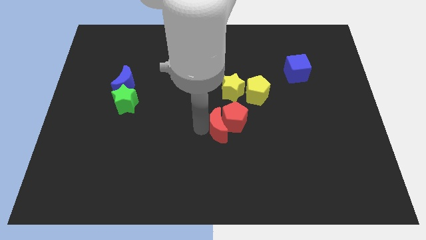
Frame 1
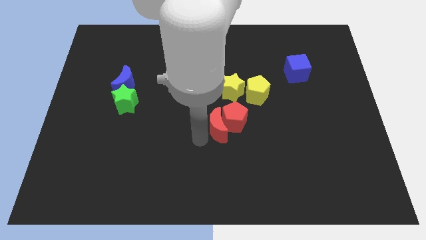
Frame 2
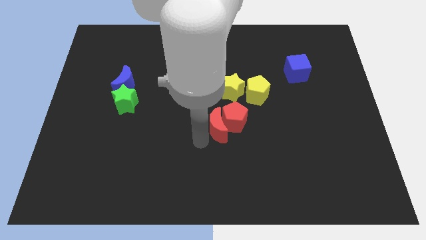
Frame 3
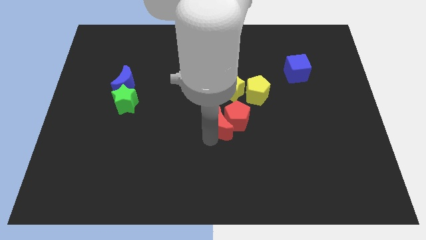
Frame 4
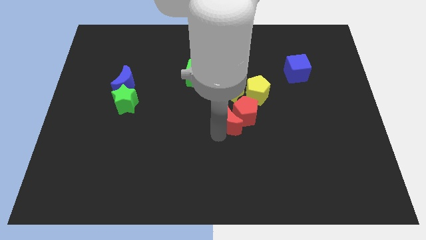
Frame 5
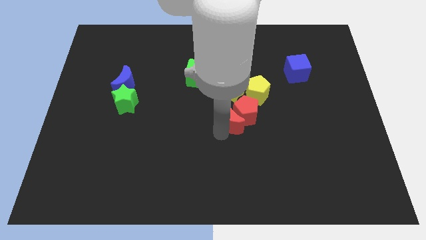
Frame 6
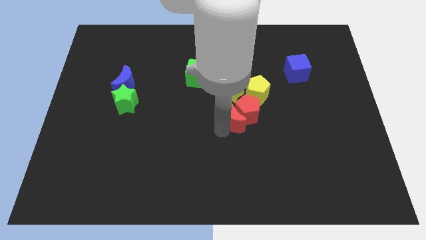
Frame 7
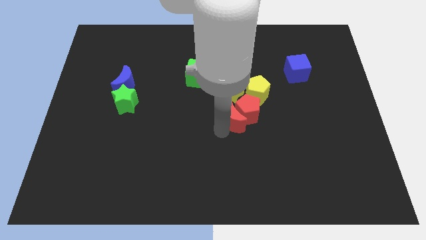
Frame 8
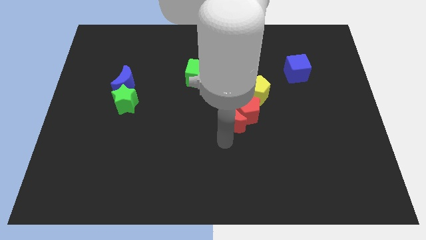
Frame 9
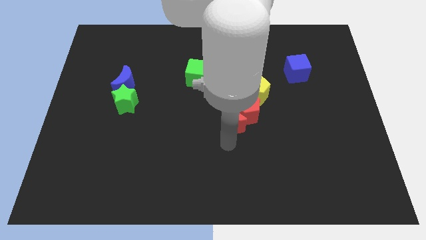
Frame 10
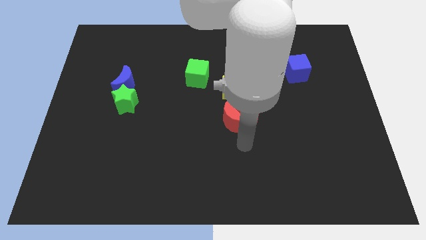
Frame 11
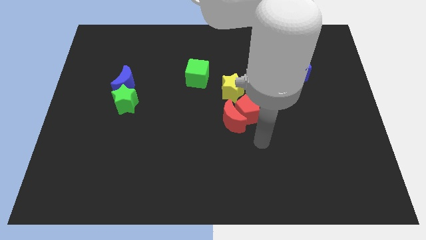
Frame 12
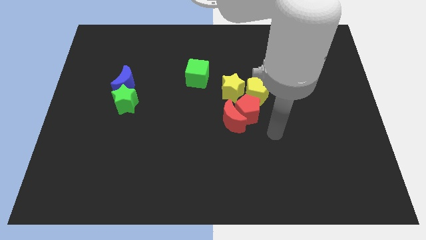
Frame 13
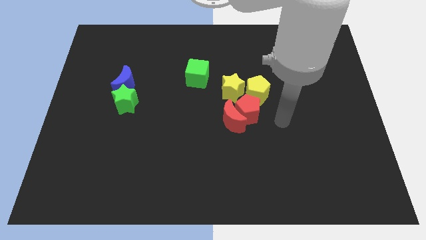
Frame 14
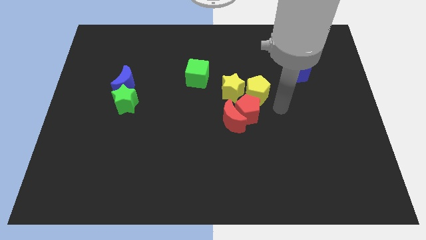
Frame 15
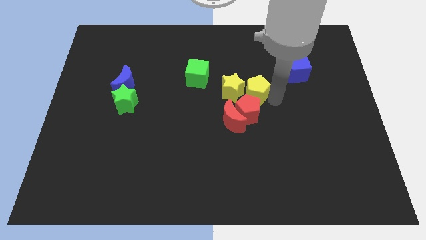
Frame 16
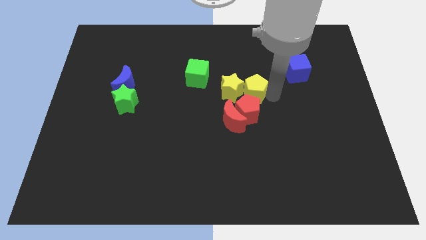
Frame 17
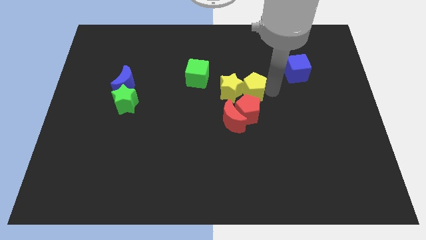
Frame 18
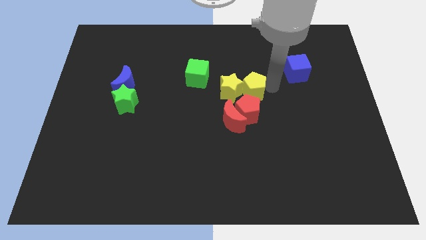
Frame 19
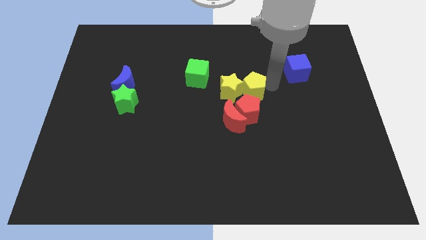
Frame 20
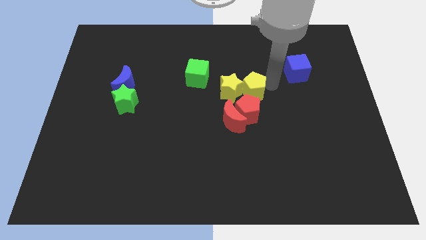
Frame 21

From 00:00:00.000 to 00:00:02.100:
place the red moon and red pentagon close to the yellow star and yellow pentagon

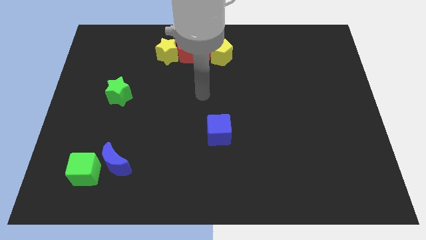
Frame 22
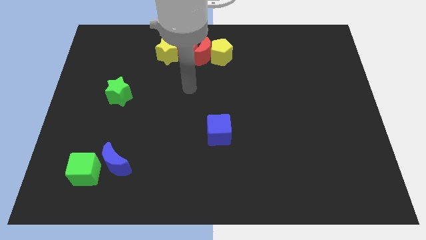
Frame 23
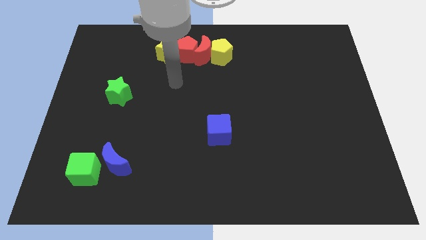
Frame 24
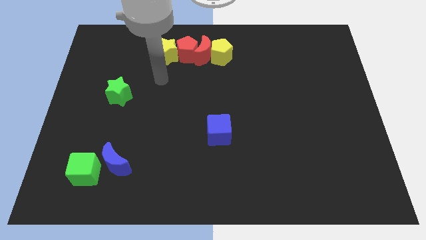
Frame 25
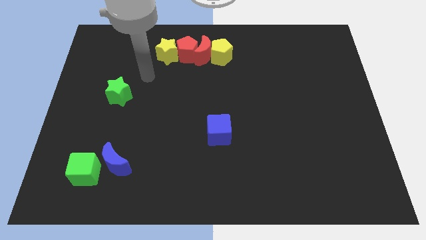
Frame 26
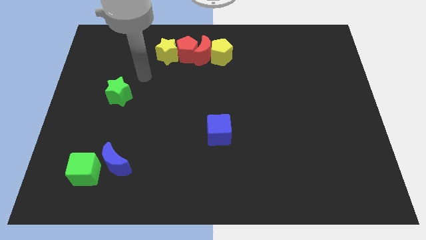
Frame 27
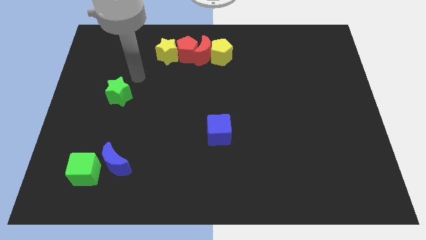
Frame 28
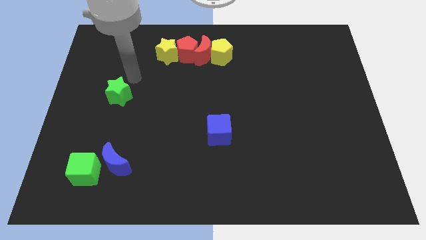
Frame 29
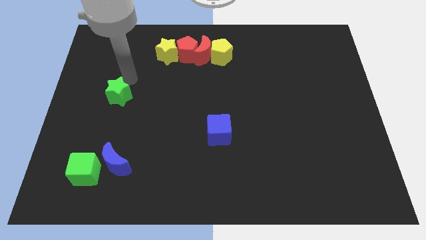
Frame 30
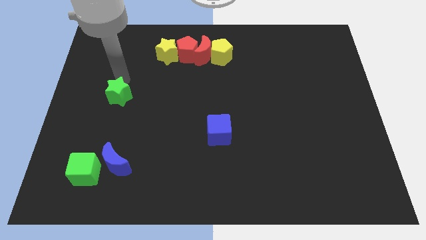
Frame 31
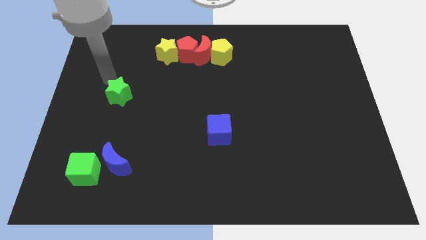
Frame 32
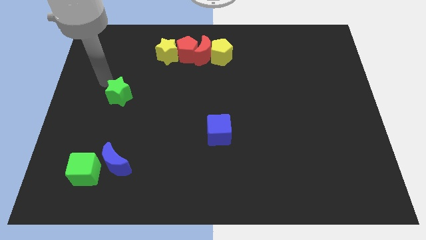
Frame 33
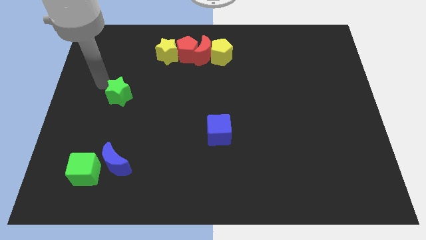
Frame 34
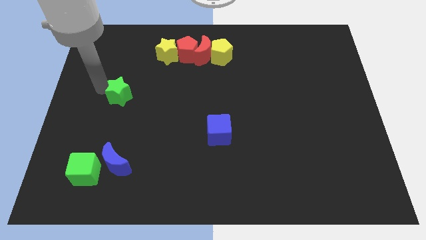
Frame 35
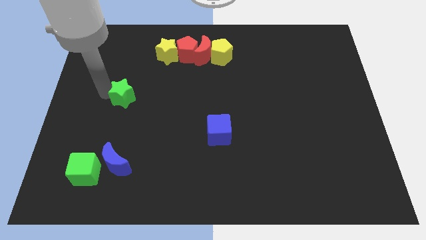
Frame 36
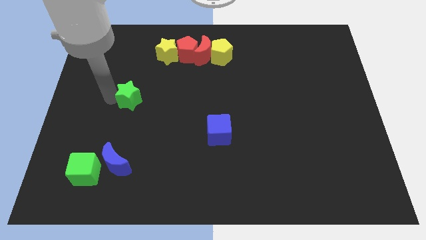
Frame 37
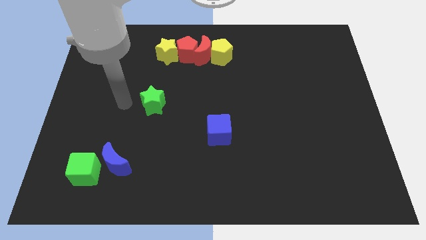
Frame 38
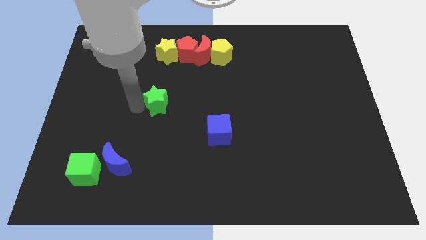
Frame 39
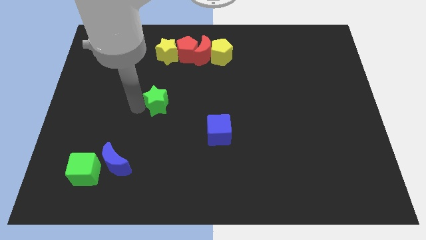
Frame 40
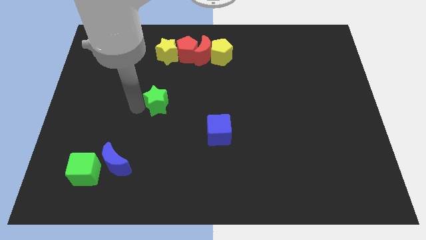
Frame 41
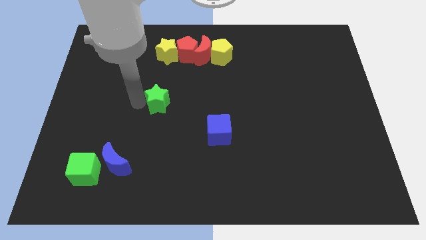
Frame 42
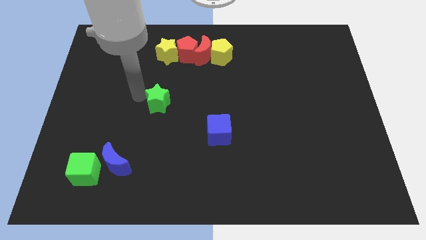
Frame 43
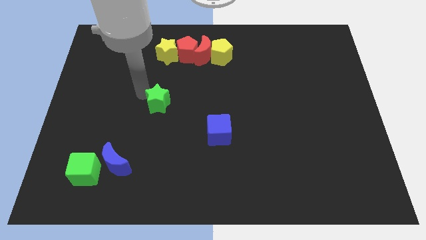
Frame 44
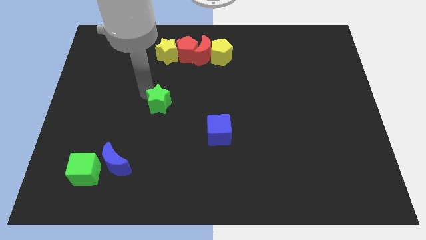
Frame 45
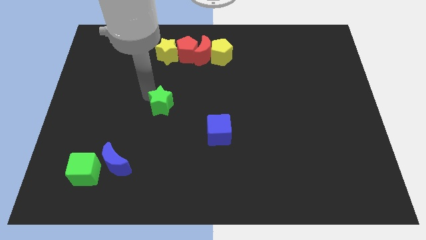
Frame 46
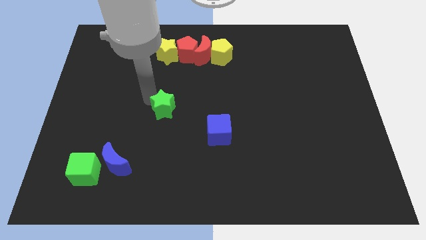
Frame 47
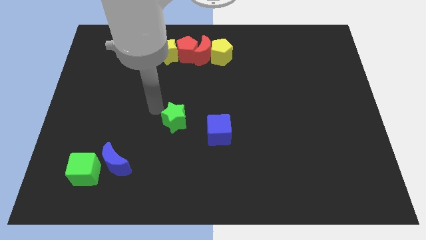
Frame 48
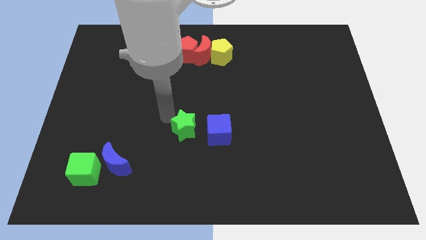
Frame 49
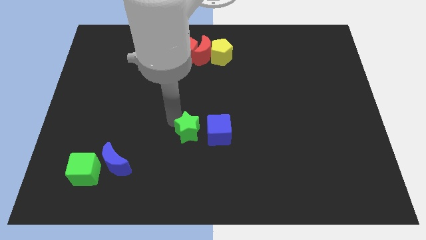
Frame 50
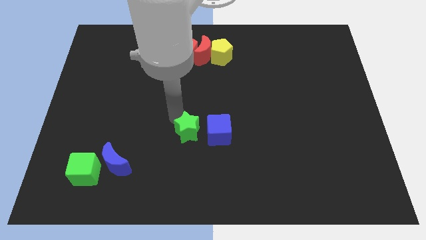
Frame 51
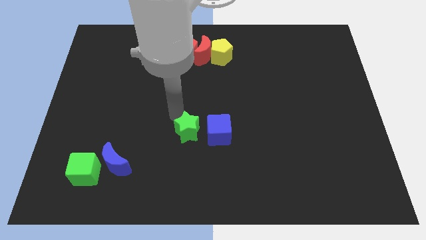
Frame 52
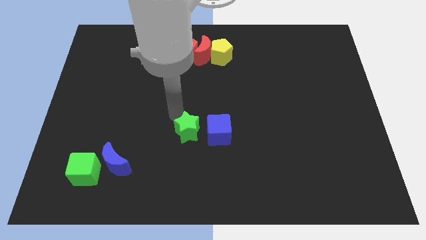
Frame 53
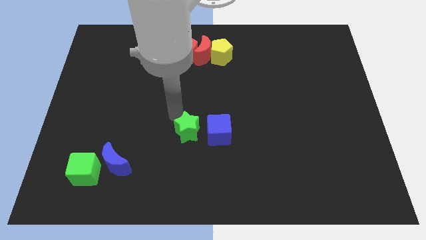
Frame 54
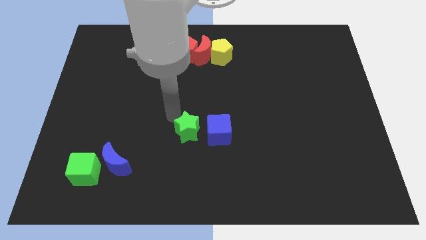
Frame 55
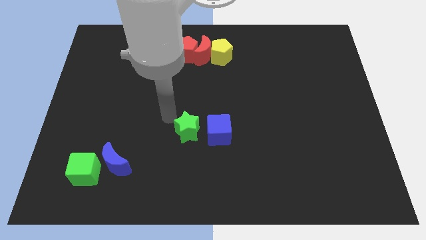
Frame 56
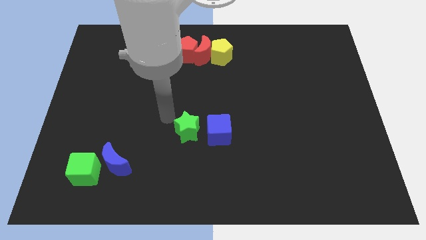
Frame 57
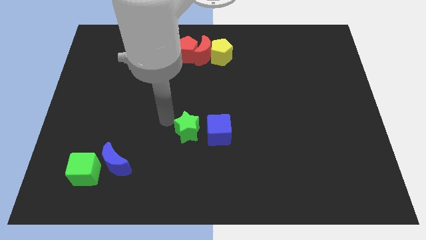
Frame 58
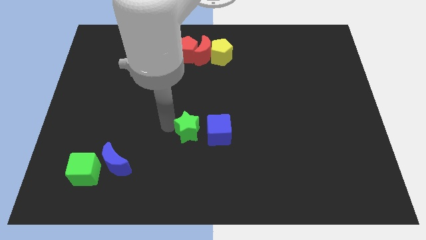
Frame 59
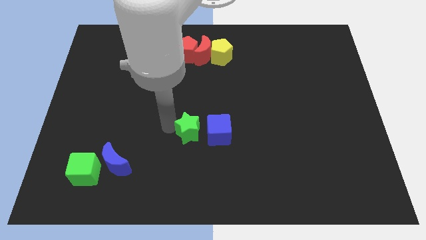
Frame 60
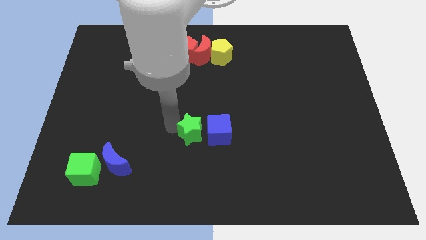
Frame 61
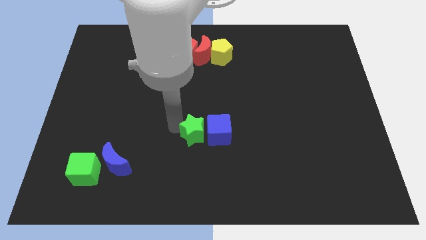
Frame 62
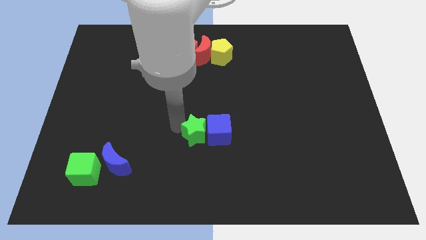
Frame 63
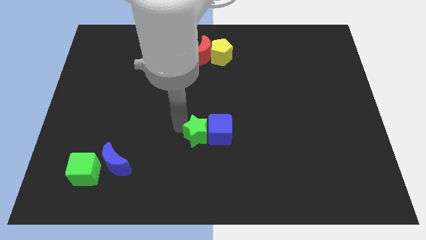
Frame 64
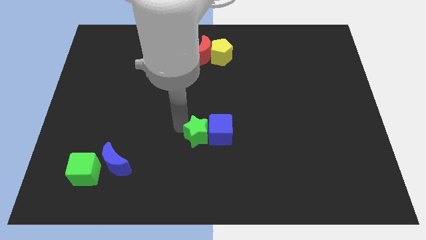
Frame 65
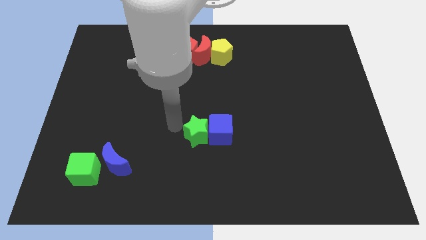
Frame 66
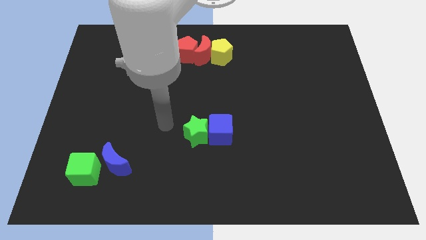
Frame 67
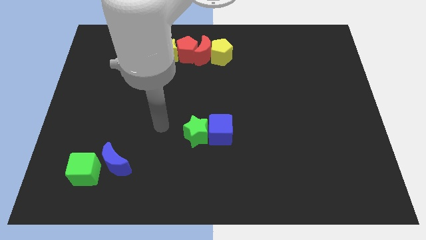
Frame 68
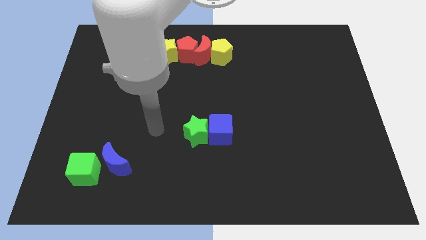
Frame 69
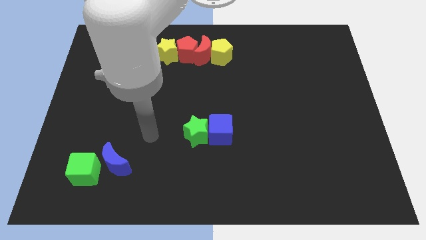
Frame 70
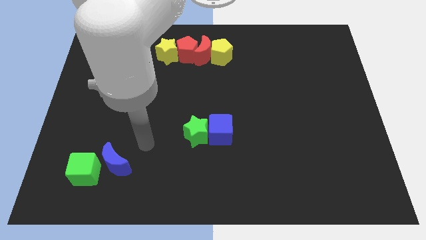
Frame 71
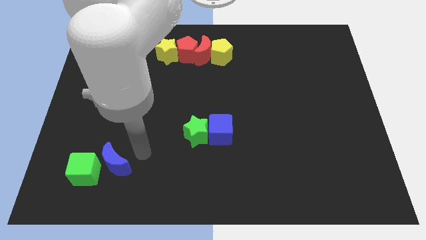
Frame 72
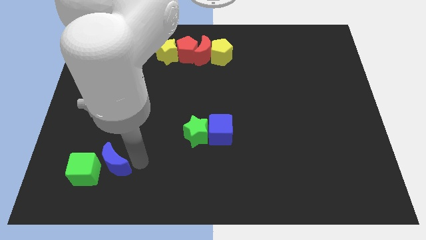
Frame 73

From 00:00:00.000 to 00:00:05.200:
push green star into blue cube

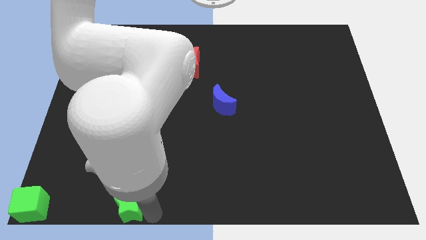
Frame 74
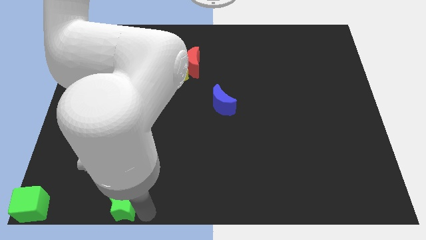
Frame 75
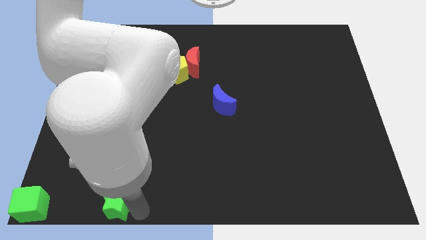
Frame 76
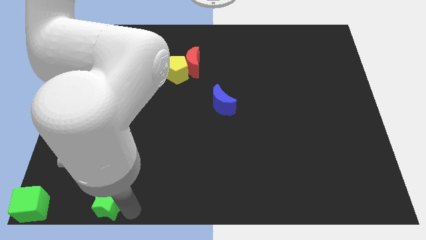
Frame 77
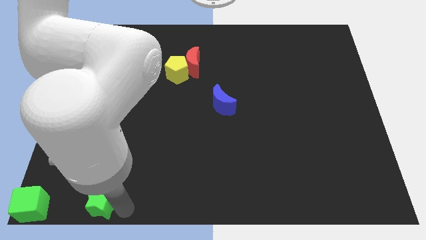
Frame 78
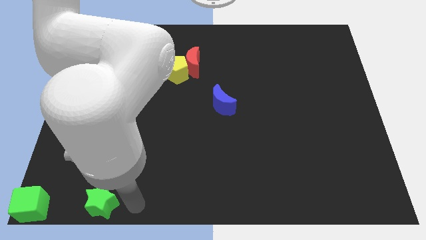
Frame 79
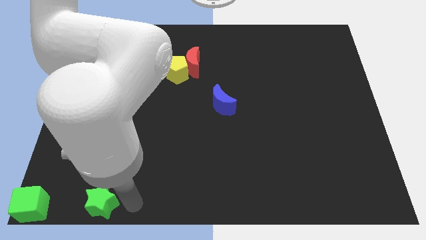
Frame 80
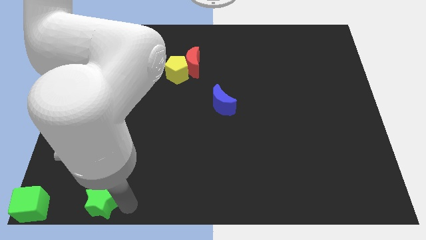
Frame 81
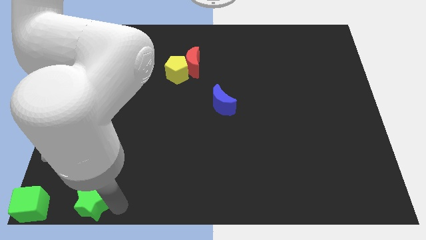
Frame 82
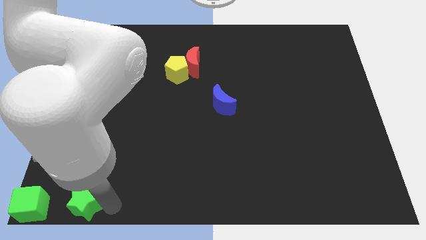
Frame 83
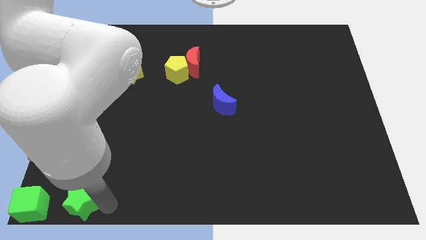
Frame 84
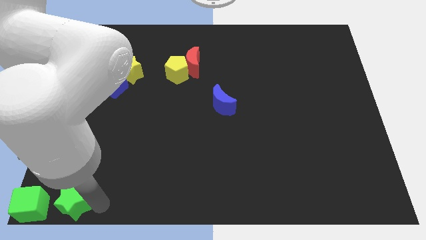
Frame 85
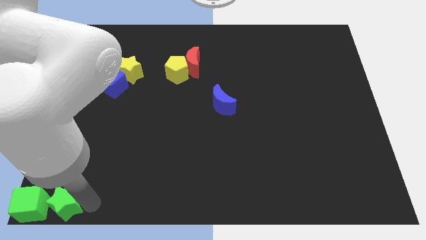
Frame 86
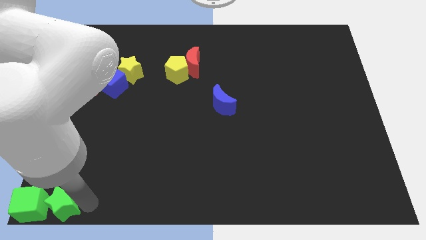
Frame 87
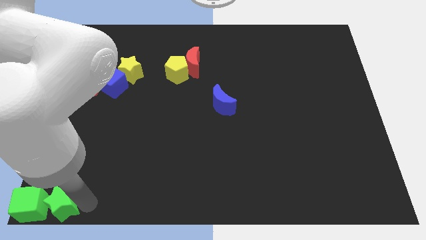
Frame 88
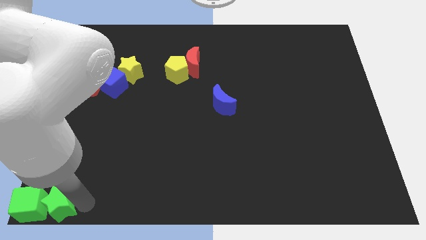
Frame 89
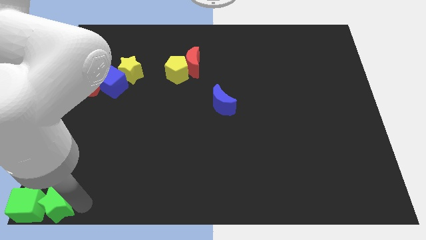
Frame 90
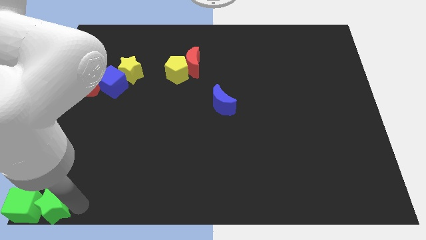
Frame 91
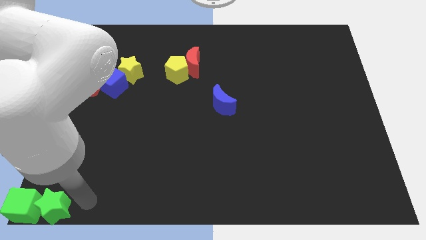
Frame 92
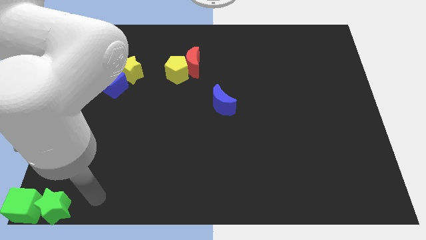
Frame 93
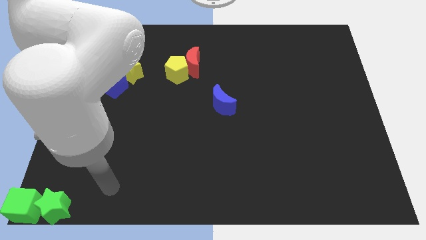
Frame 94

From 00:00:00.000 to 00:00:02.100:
arrange the green star at the bottom left of the board
